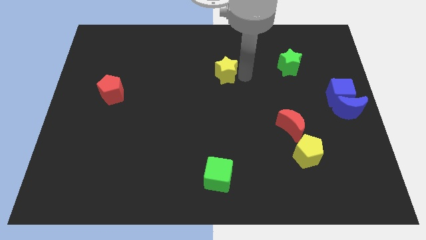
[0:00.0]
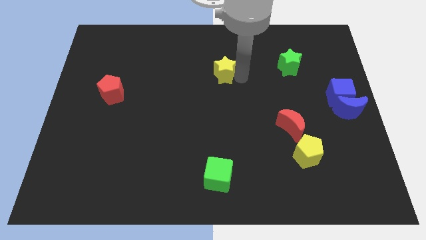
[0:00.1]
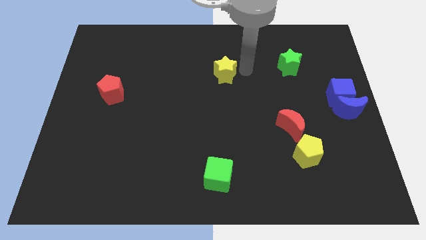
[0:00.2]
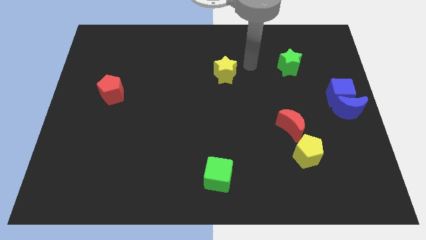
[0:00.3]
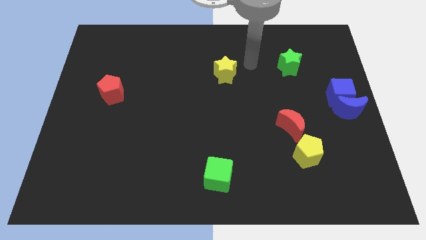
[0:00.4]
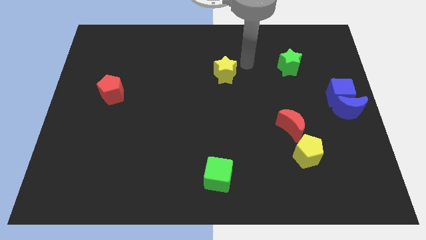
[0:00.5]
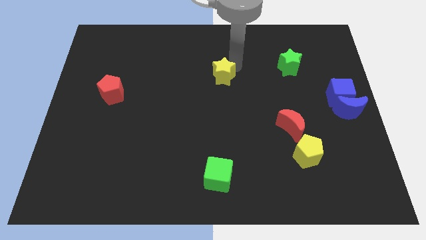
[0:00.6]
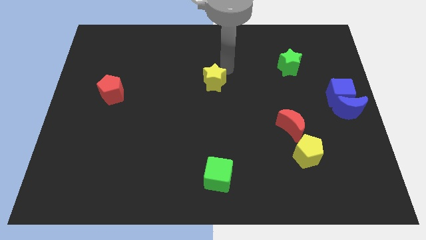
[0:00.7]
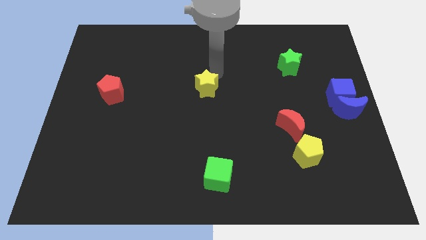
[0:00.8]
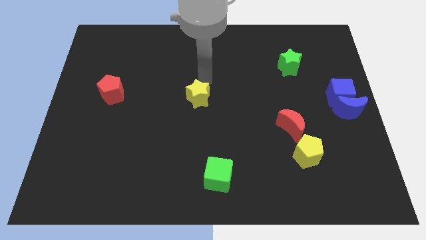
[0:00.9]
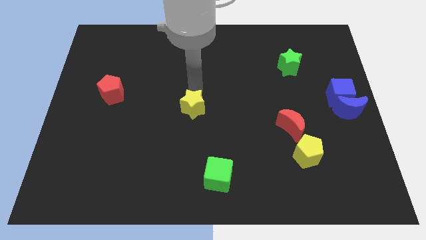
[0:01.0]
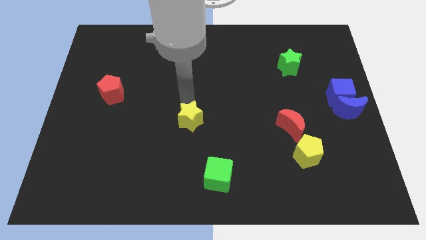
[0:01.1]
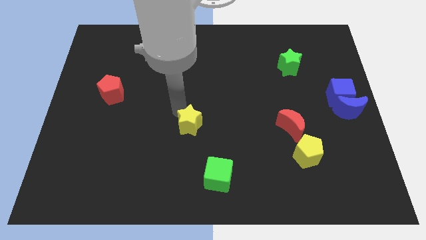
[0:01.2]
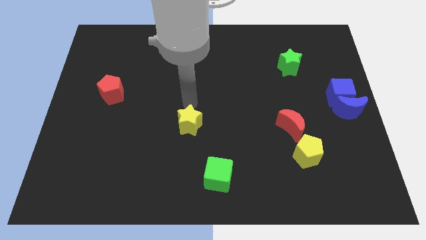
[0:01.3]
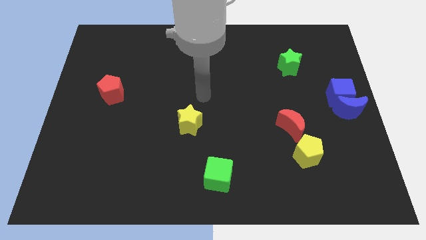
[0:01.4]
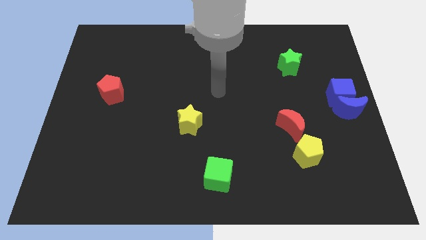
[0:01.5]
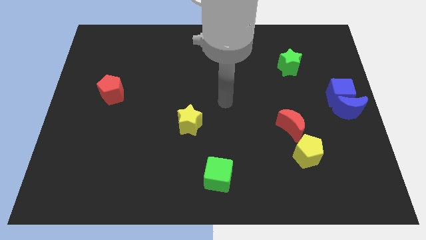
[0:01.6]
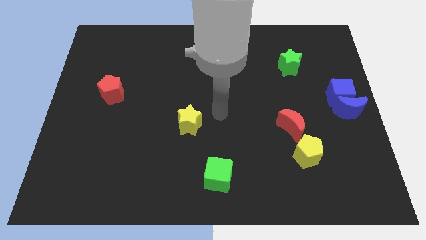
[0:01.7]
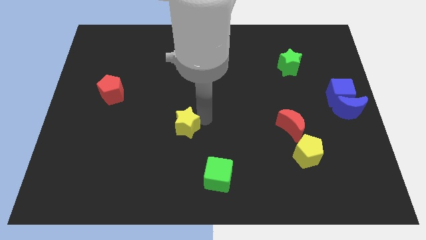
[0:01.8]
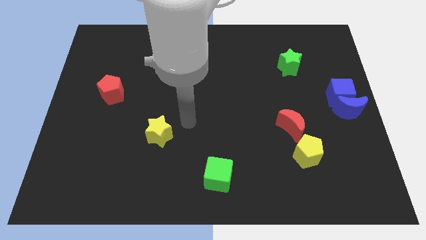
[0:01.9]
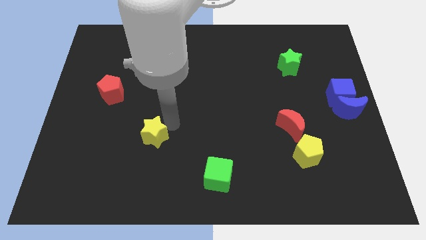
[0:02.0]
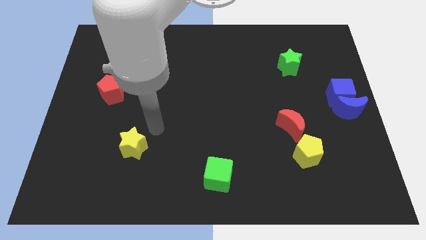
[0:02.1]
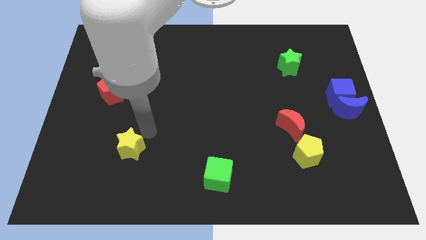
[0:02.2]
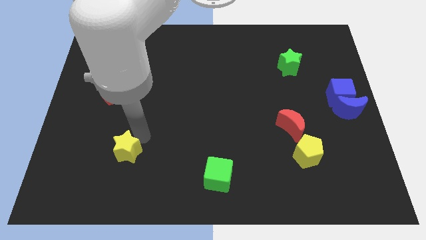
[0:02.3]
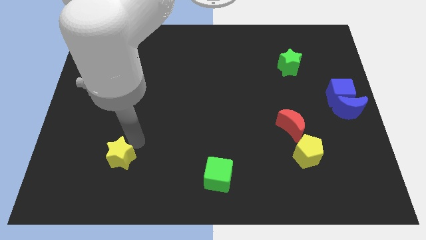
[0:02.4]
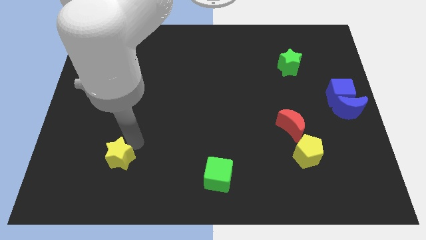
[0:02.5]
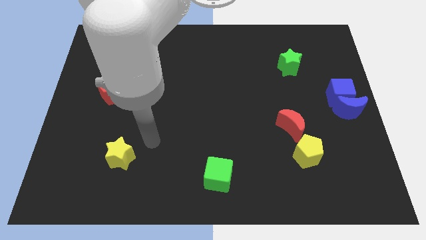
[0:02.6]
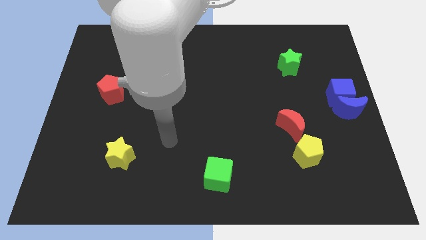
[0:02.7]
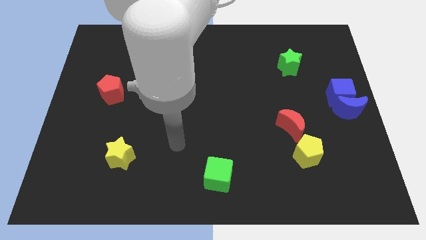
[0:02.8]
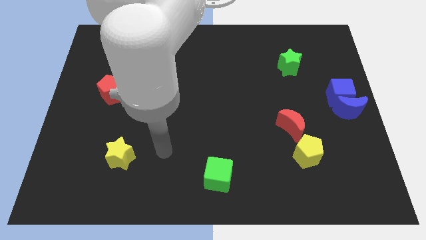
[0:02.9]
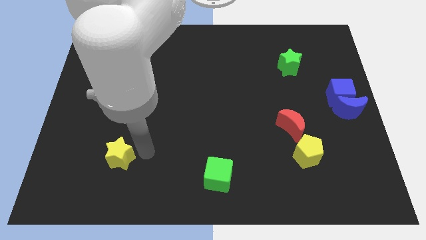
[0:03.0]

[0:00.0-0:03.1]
push yellow star towards down

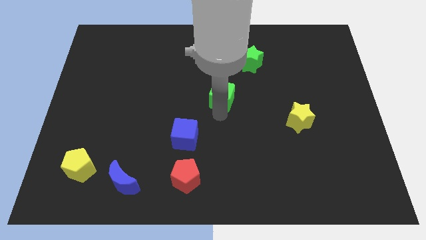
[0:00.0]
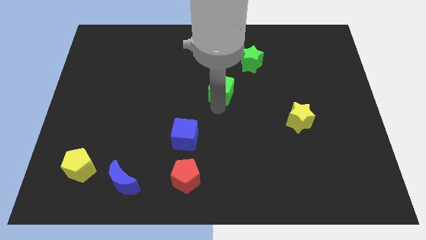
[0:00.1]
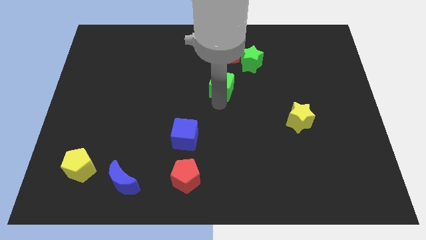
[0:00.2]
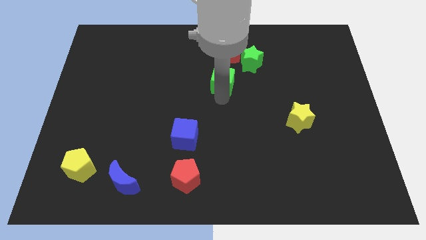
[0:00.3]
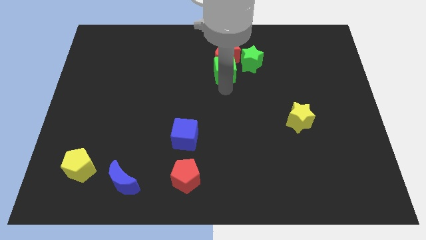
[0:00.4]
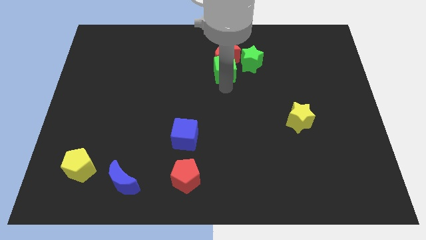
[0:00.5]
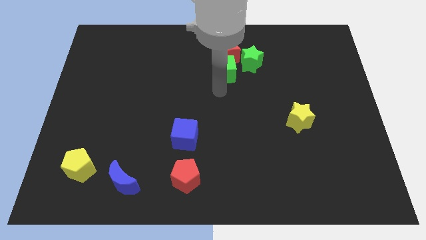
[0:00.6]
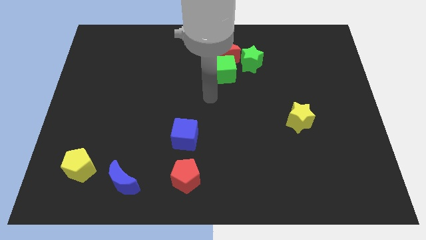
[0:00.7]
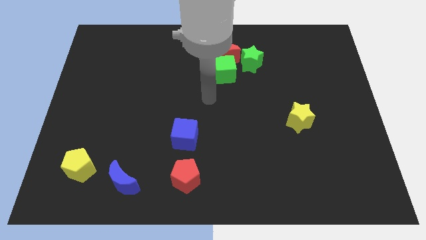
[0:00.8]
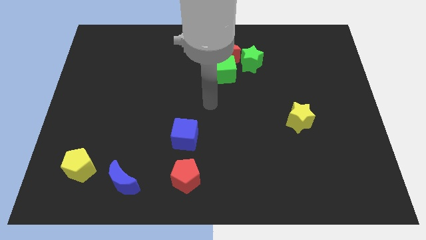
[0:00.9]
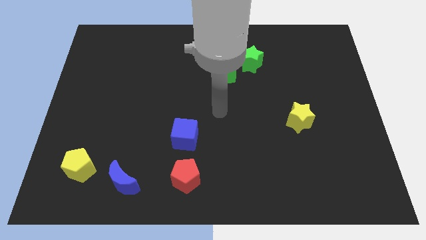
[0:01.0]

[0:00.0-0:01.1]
push the green cube at the bottom of the red moon

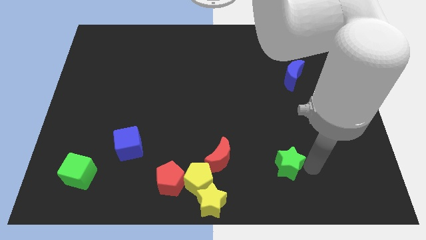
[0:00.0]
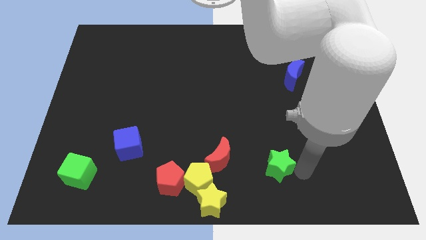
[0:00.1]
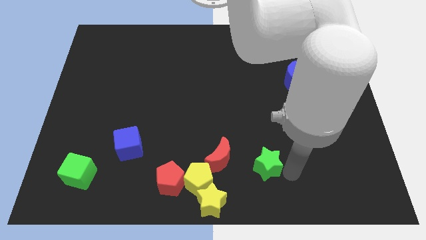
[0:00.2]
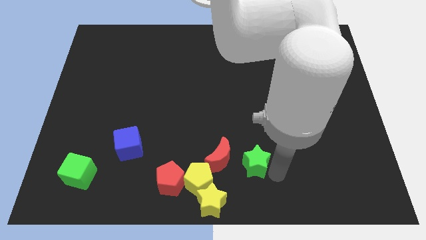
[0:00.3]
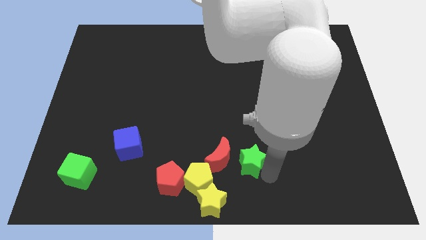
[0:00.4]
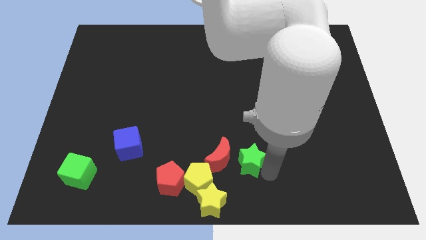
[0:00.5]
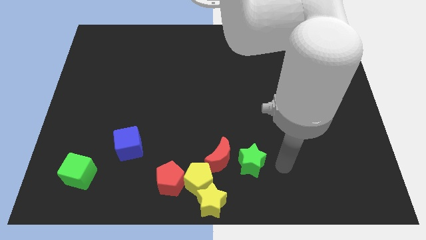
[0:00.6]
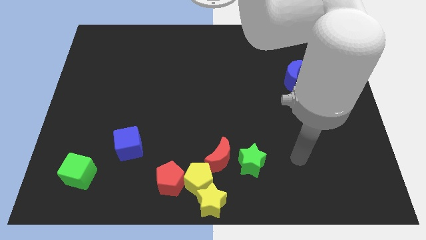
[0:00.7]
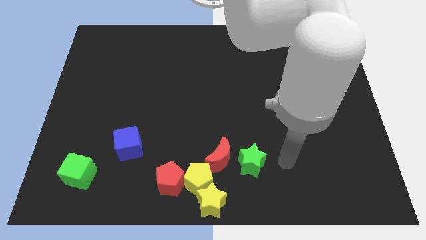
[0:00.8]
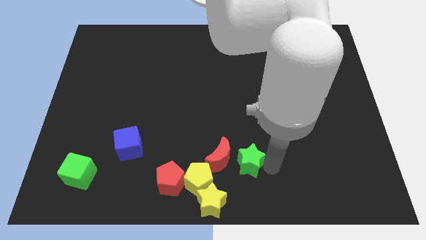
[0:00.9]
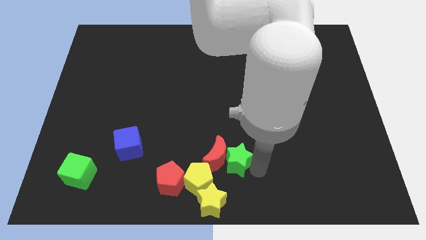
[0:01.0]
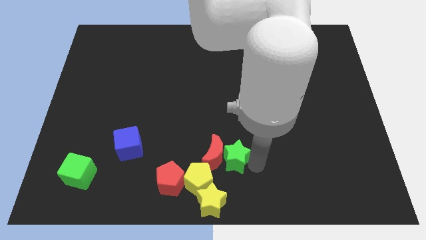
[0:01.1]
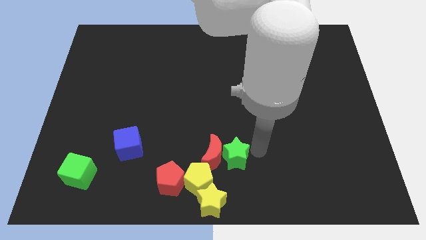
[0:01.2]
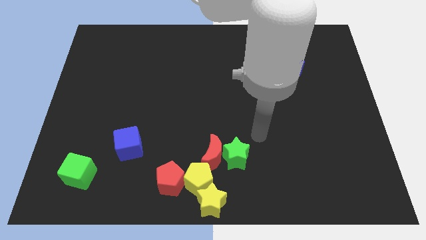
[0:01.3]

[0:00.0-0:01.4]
slightly touch red crescent with green star

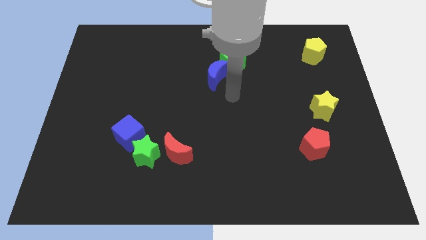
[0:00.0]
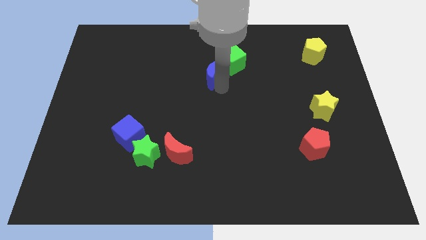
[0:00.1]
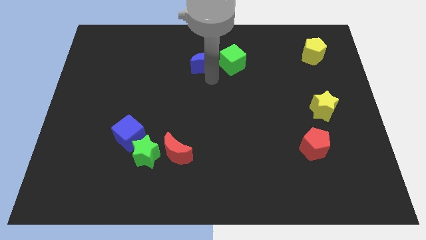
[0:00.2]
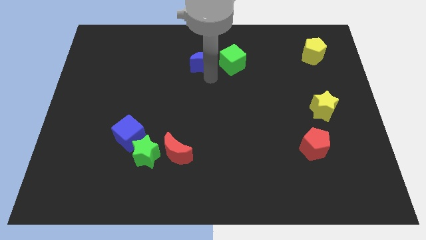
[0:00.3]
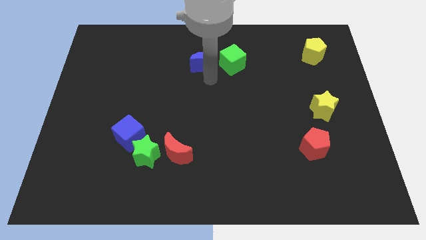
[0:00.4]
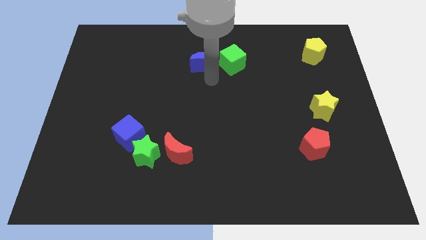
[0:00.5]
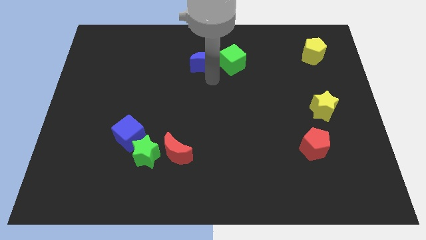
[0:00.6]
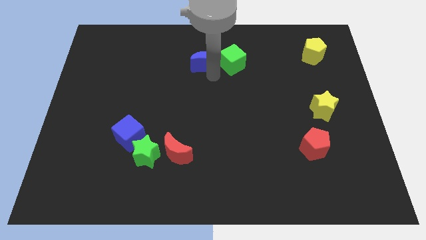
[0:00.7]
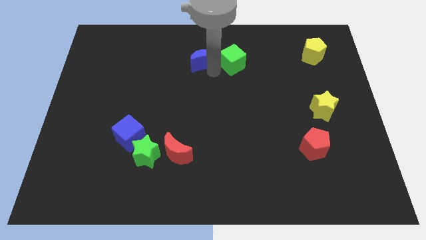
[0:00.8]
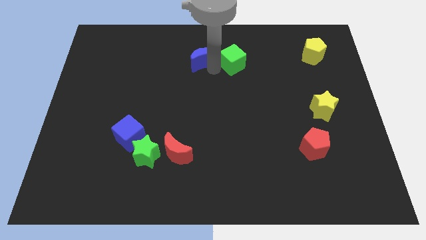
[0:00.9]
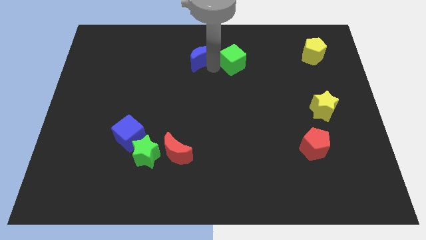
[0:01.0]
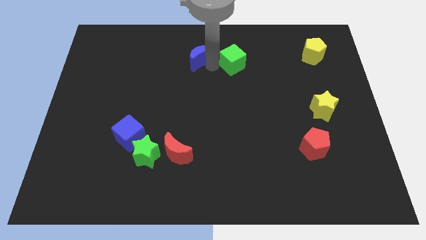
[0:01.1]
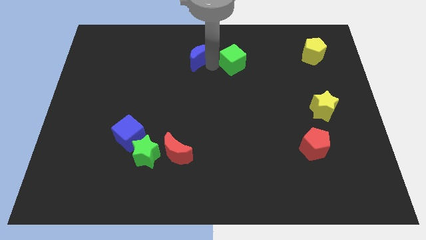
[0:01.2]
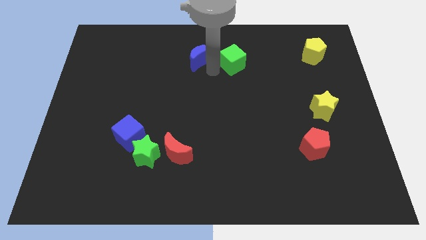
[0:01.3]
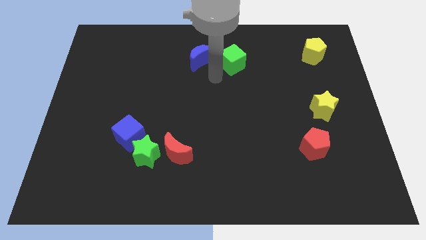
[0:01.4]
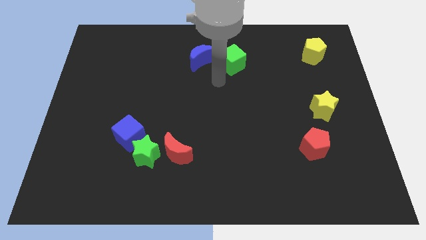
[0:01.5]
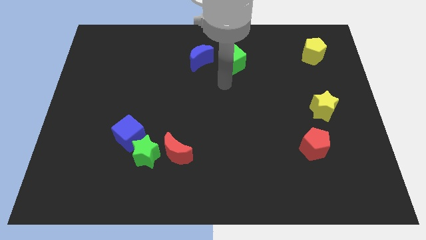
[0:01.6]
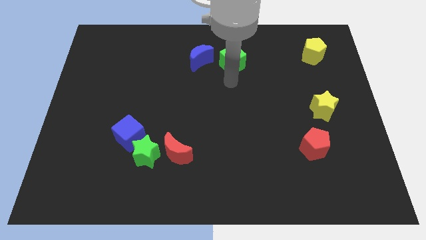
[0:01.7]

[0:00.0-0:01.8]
separate the blue crescent from the green cube

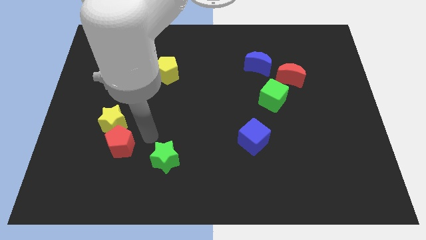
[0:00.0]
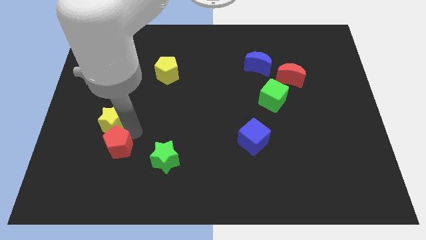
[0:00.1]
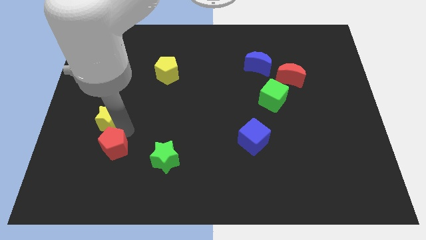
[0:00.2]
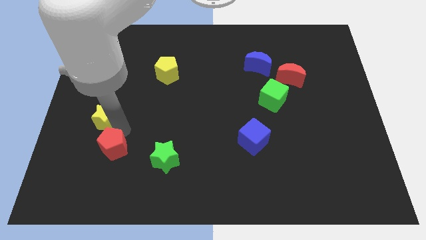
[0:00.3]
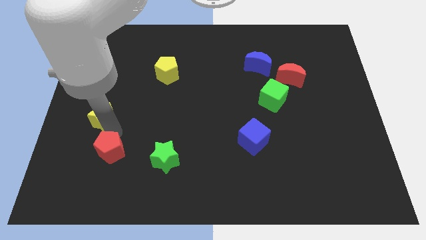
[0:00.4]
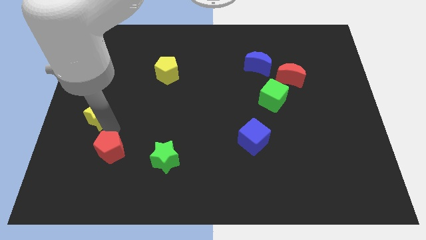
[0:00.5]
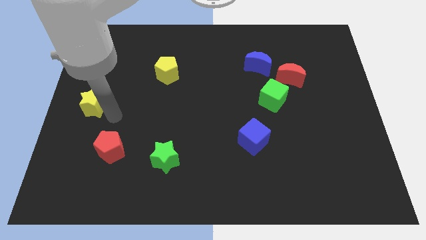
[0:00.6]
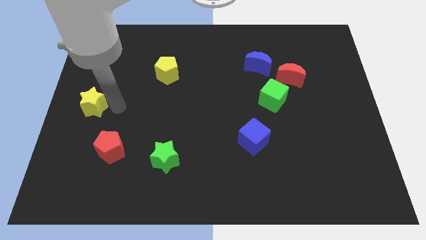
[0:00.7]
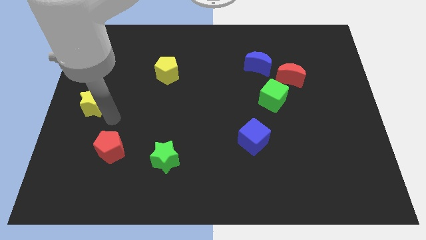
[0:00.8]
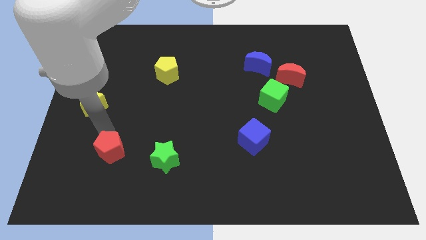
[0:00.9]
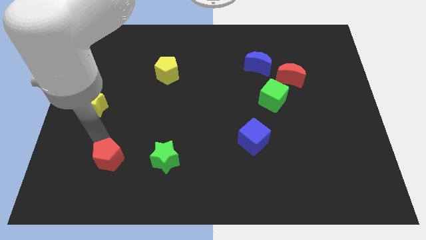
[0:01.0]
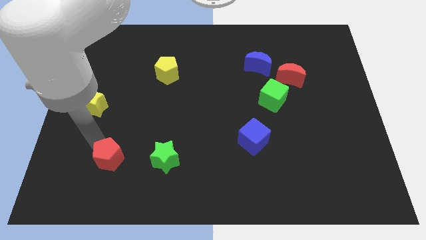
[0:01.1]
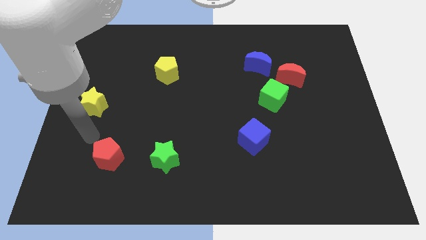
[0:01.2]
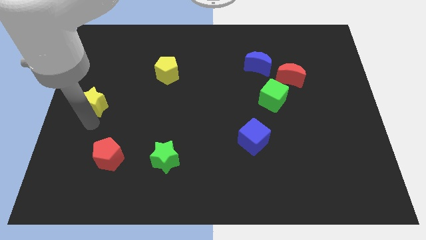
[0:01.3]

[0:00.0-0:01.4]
separate the yellow star and red pentagon

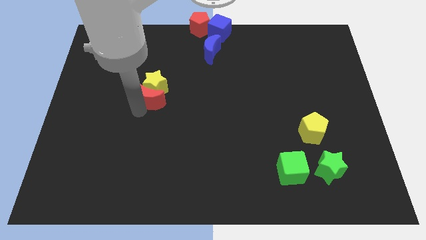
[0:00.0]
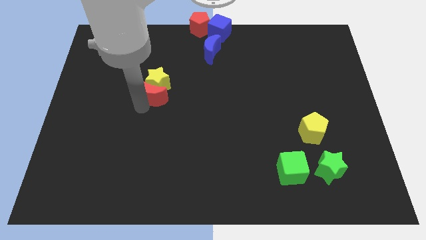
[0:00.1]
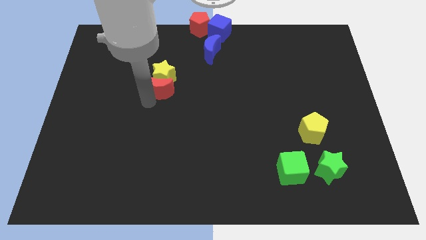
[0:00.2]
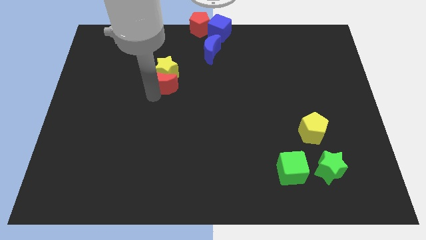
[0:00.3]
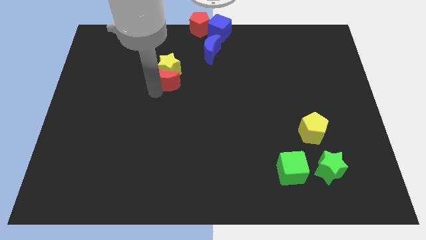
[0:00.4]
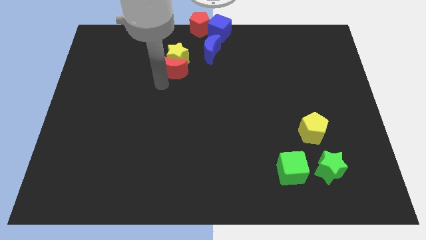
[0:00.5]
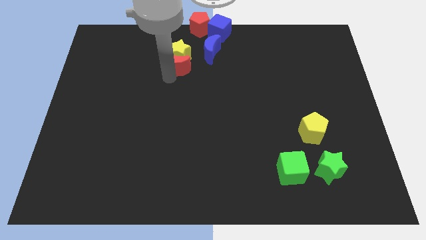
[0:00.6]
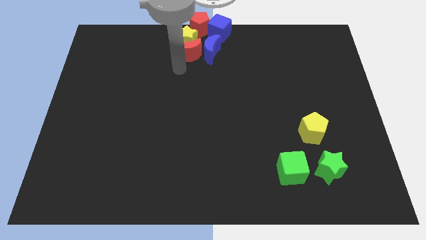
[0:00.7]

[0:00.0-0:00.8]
push the red crescent along with the yellow star to the left of the blue crescent
